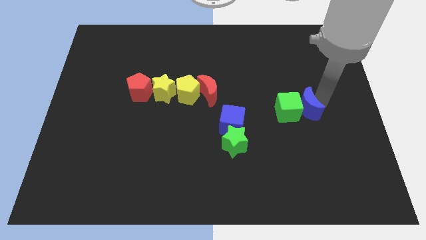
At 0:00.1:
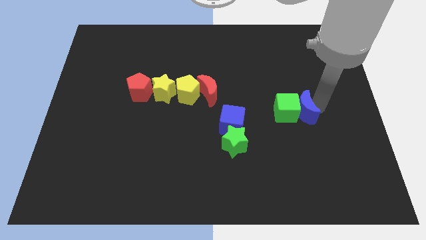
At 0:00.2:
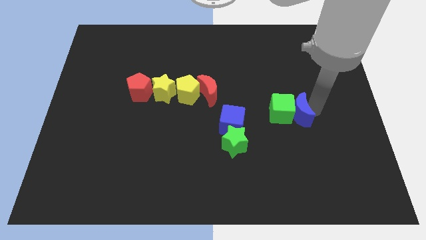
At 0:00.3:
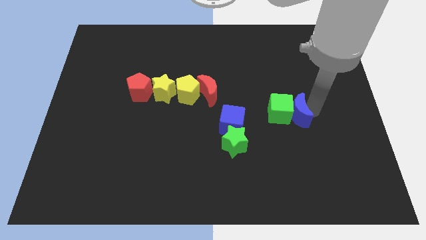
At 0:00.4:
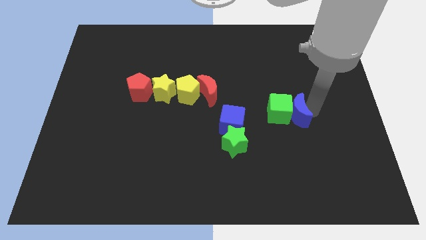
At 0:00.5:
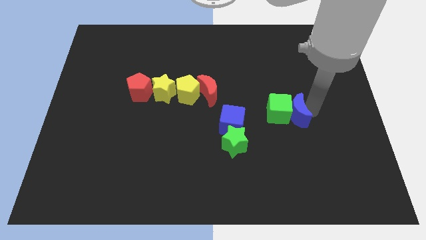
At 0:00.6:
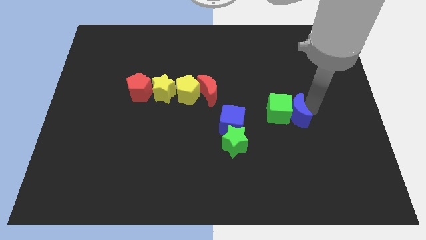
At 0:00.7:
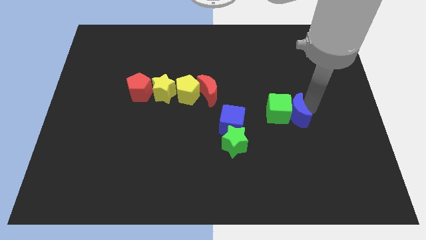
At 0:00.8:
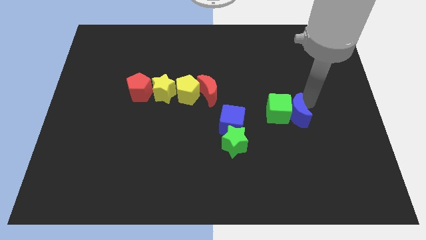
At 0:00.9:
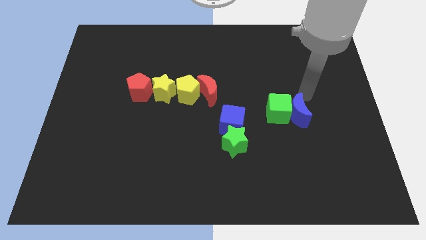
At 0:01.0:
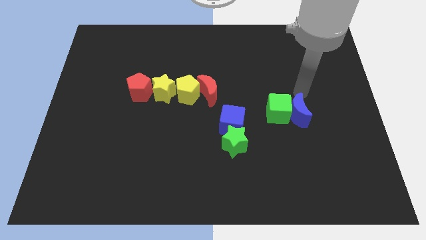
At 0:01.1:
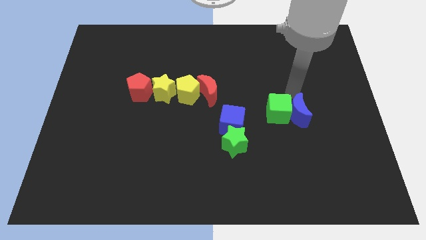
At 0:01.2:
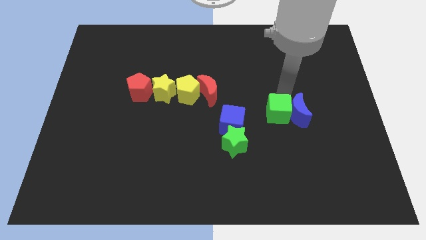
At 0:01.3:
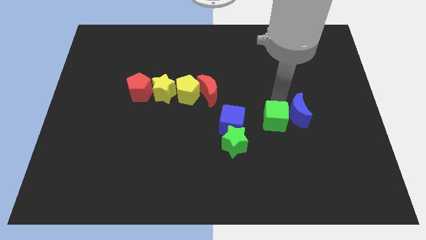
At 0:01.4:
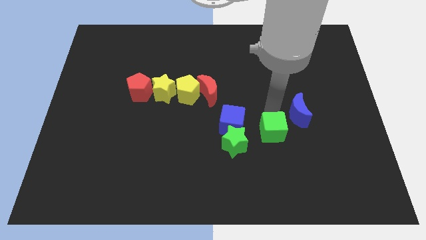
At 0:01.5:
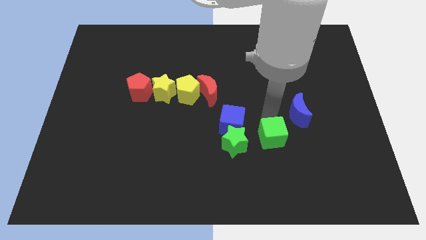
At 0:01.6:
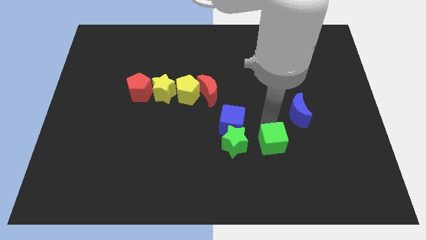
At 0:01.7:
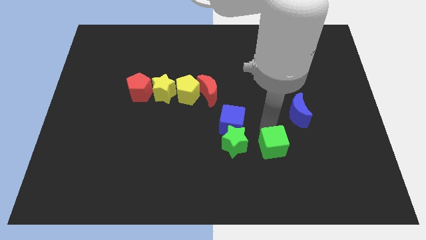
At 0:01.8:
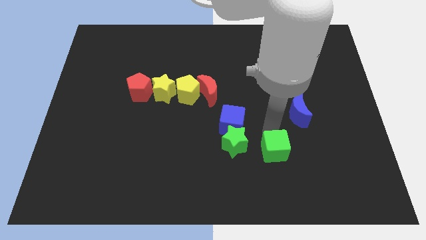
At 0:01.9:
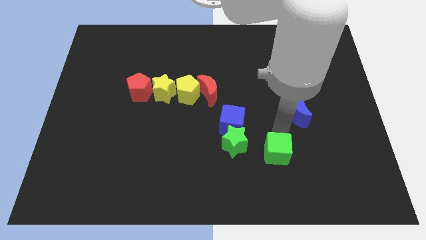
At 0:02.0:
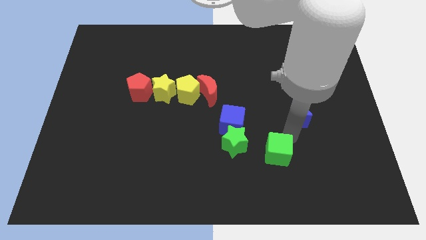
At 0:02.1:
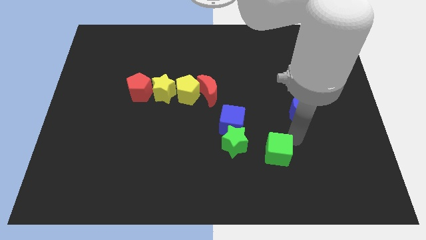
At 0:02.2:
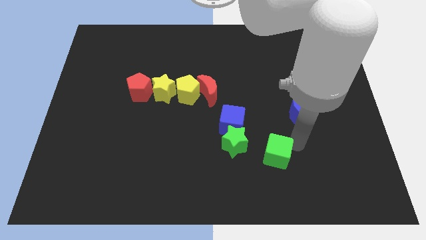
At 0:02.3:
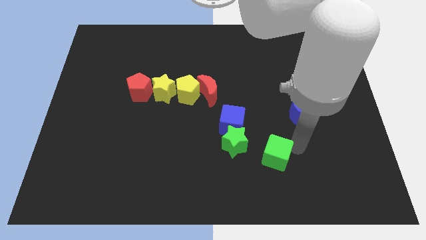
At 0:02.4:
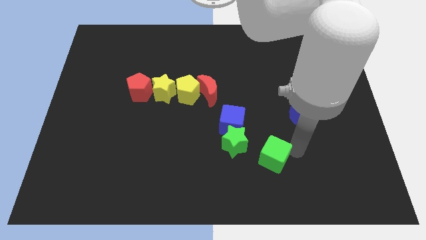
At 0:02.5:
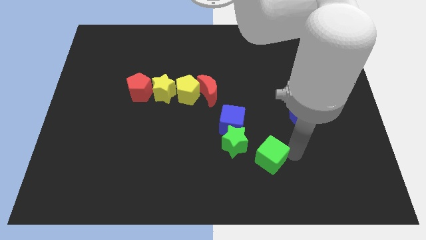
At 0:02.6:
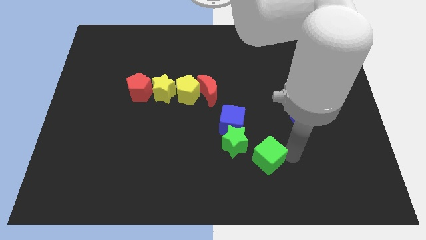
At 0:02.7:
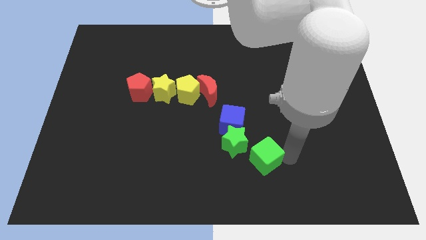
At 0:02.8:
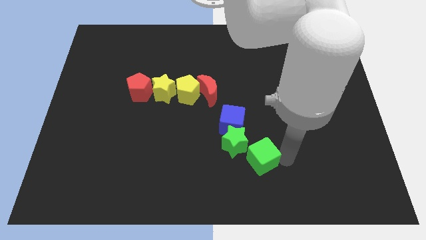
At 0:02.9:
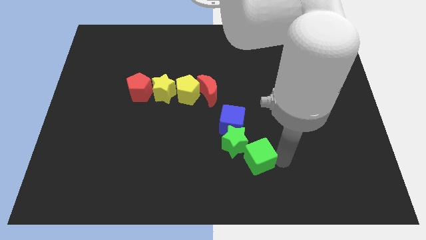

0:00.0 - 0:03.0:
move the green cube towards the bottom right of the green star

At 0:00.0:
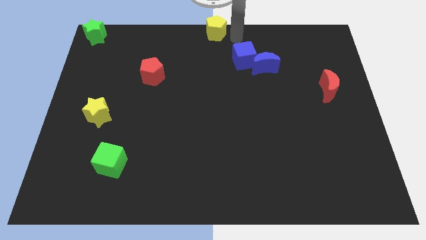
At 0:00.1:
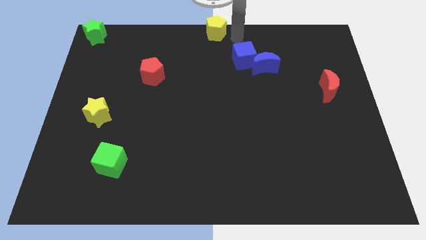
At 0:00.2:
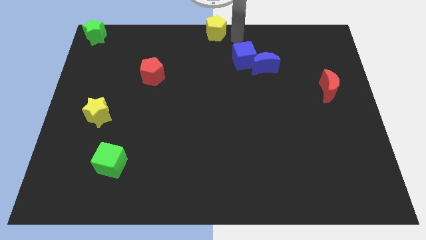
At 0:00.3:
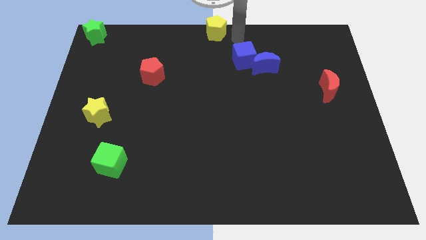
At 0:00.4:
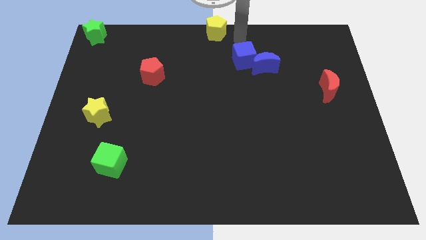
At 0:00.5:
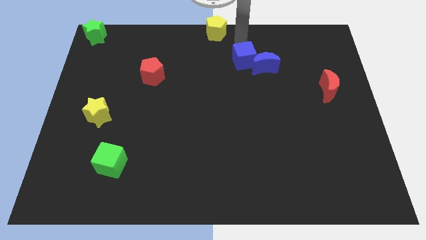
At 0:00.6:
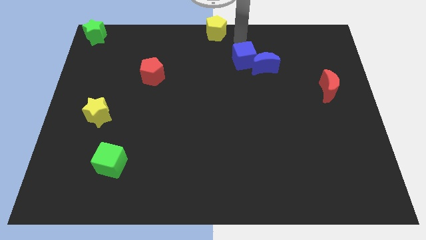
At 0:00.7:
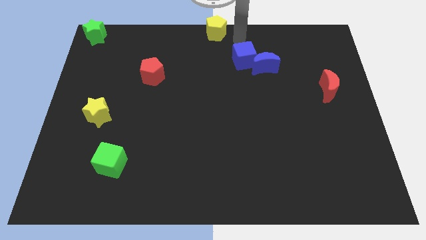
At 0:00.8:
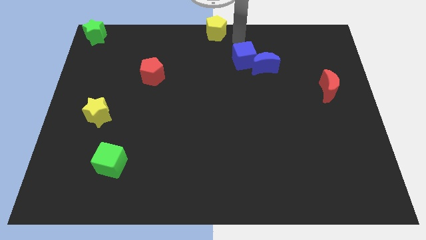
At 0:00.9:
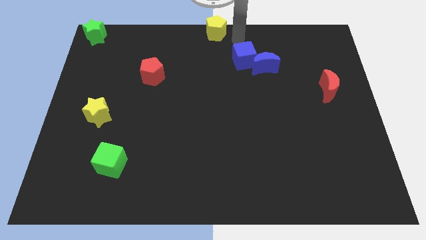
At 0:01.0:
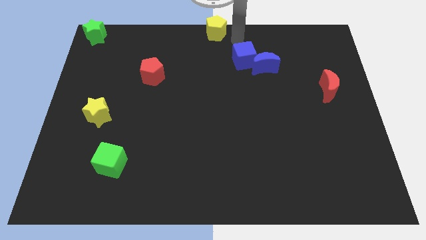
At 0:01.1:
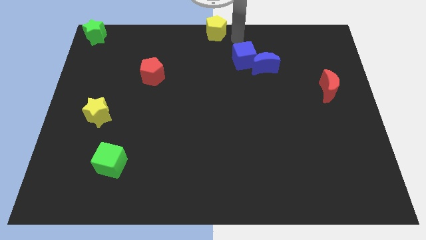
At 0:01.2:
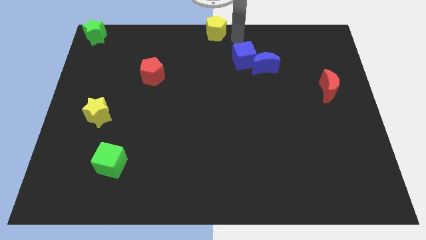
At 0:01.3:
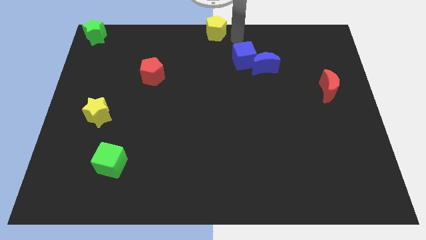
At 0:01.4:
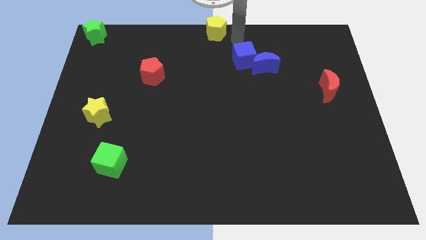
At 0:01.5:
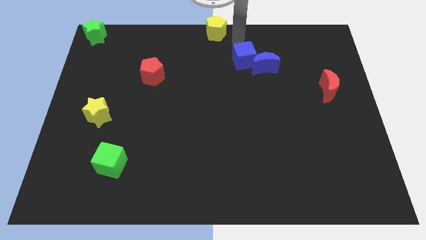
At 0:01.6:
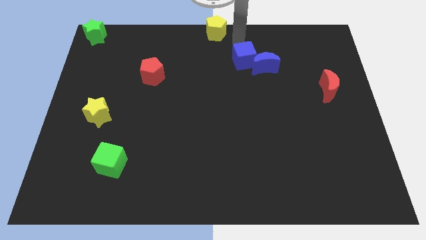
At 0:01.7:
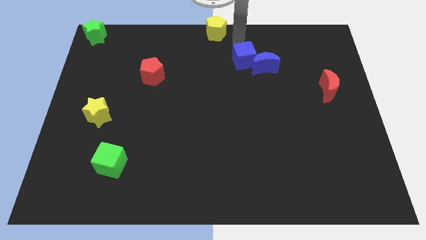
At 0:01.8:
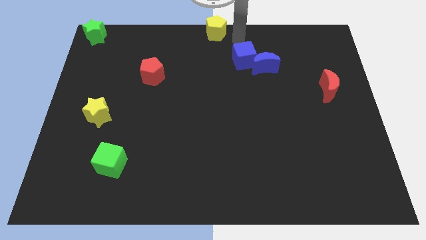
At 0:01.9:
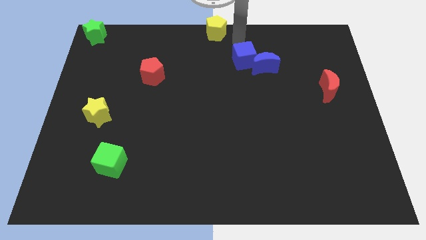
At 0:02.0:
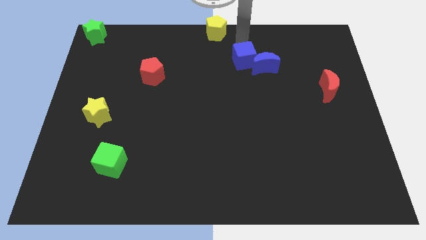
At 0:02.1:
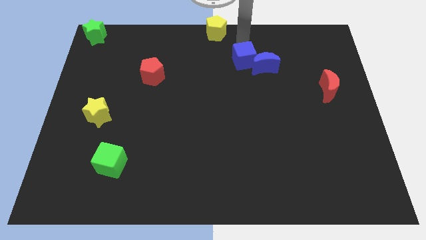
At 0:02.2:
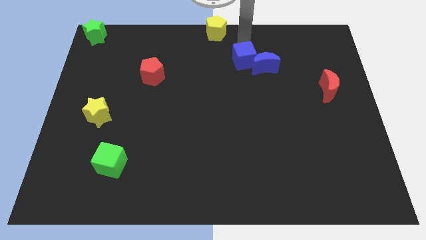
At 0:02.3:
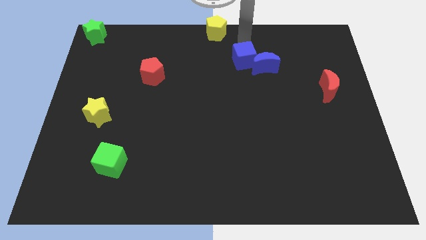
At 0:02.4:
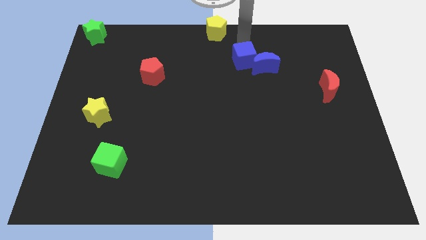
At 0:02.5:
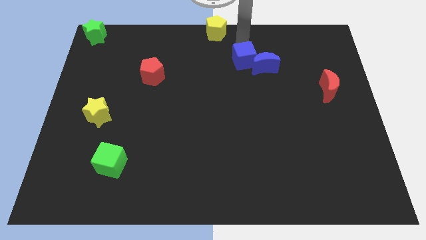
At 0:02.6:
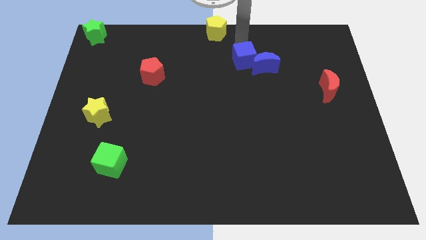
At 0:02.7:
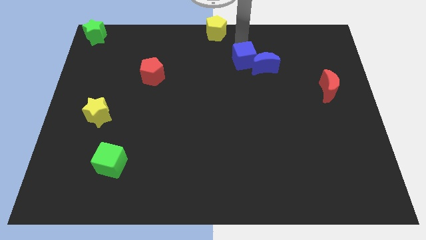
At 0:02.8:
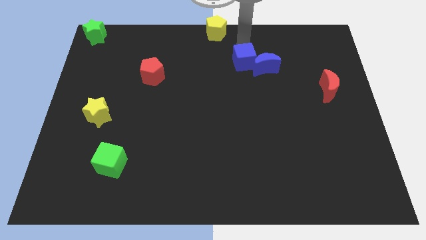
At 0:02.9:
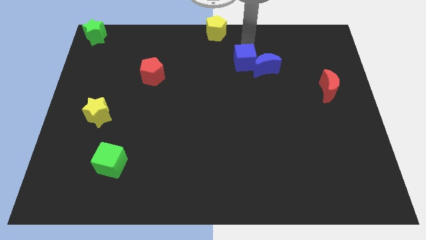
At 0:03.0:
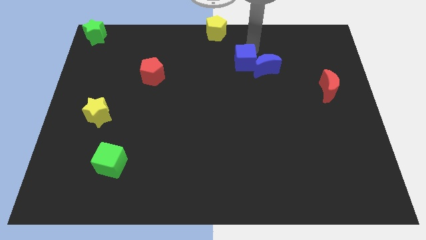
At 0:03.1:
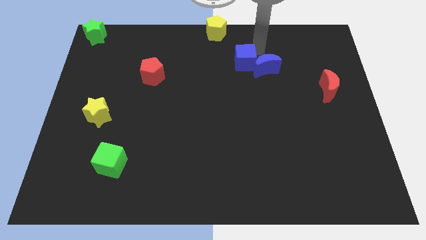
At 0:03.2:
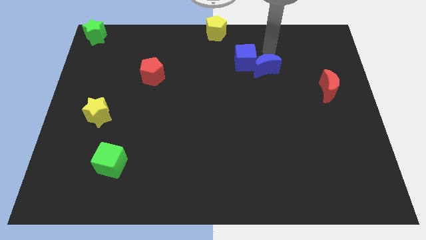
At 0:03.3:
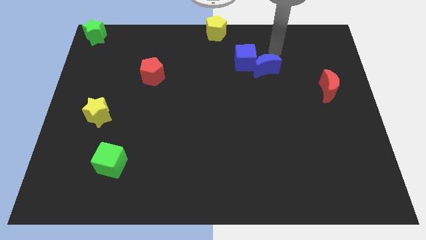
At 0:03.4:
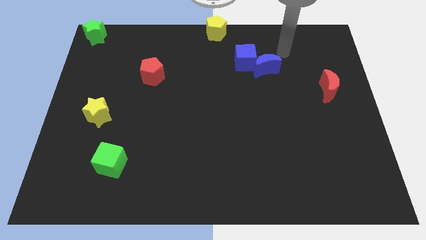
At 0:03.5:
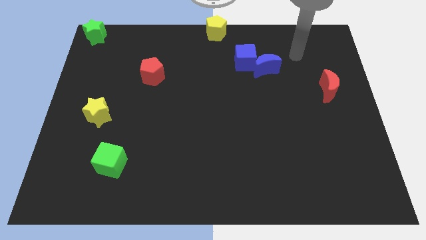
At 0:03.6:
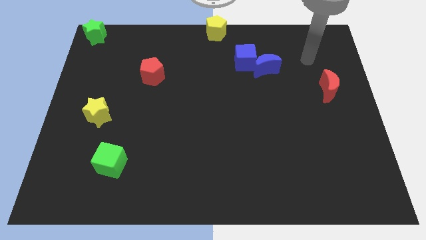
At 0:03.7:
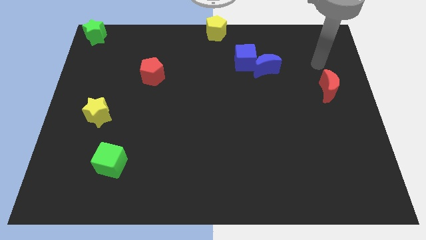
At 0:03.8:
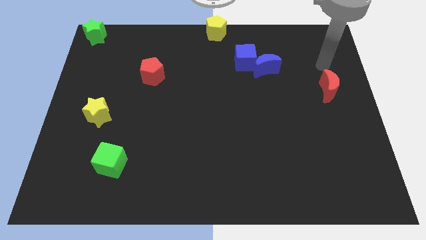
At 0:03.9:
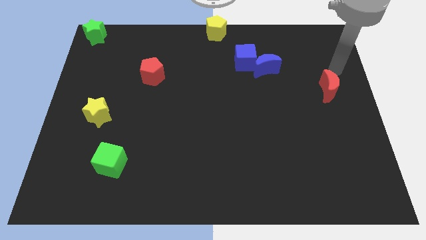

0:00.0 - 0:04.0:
move your arm away from the yellow pentagon

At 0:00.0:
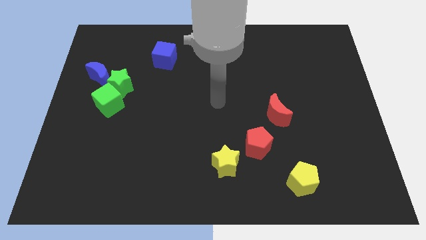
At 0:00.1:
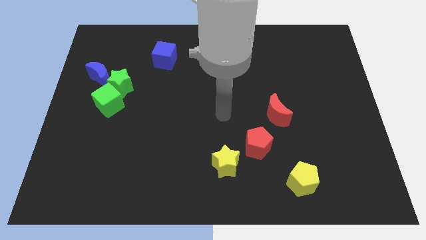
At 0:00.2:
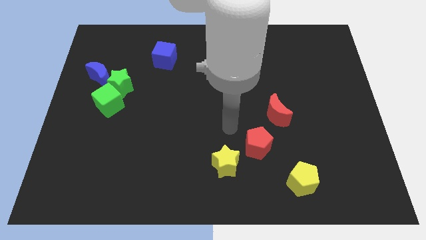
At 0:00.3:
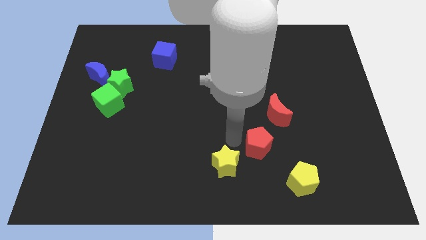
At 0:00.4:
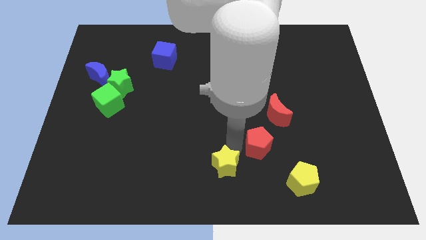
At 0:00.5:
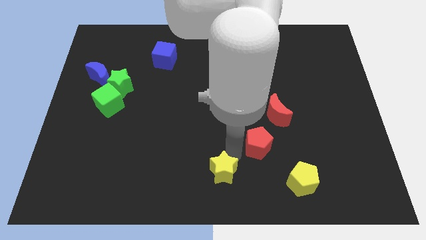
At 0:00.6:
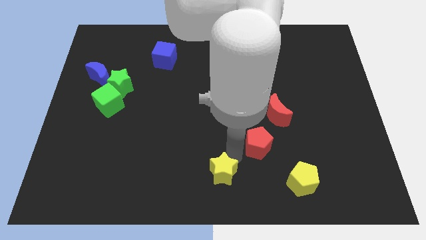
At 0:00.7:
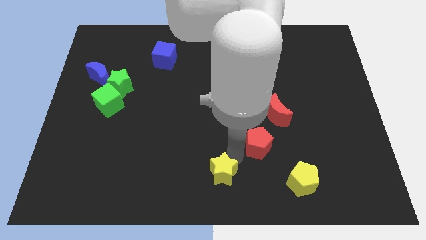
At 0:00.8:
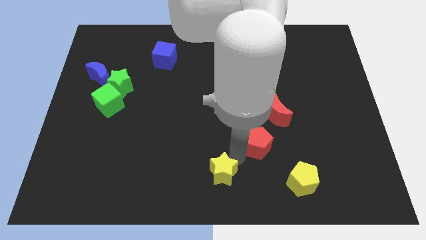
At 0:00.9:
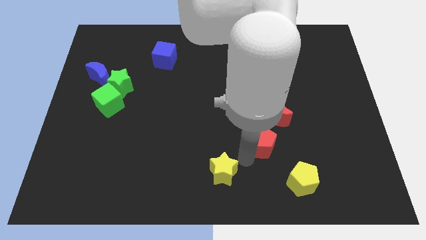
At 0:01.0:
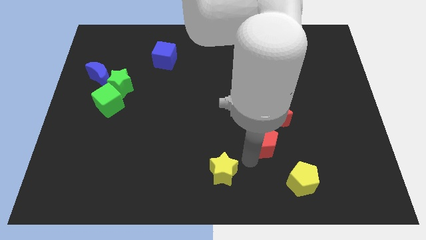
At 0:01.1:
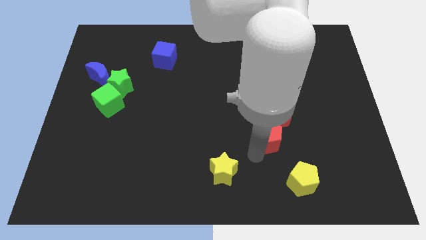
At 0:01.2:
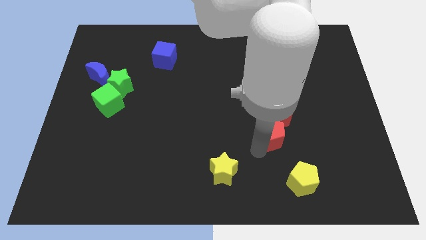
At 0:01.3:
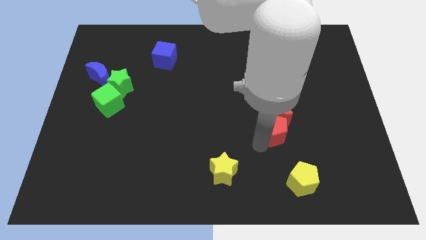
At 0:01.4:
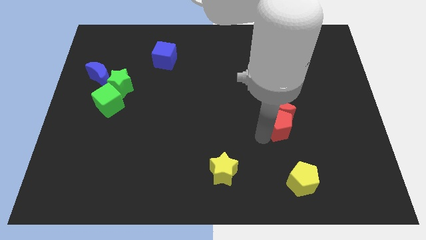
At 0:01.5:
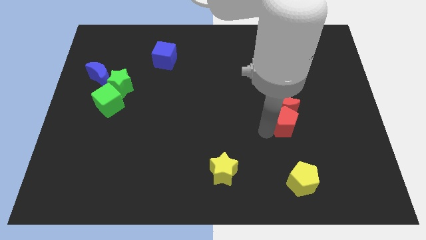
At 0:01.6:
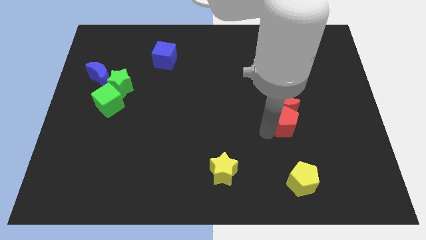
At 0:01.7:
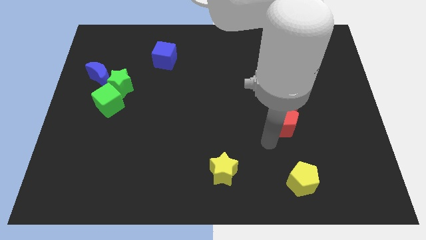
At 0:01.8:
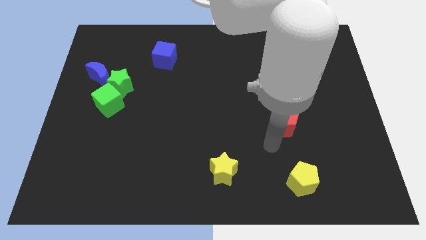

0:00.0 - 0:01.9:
move the red pentagon into the red moon

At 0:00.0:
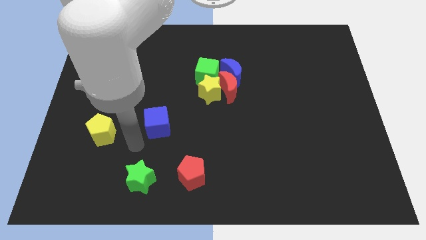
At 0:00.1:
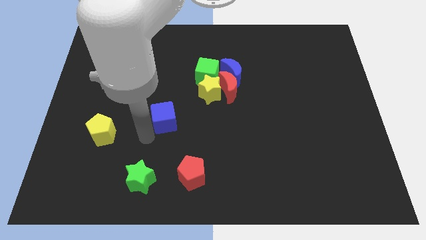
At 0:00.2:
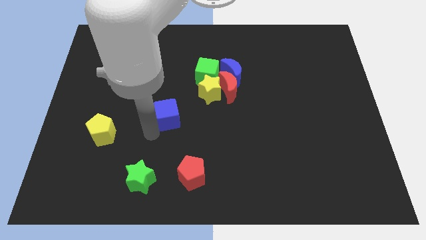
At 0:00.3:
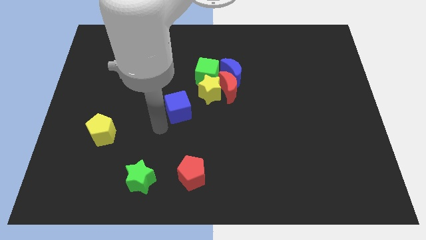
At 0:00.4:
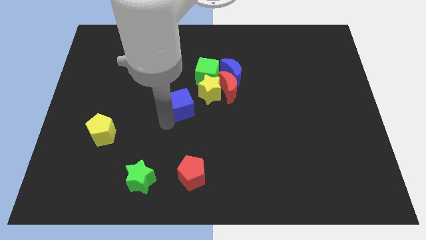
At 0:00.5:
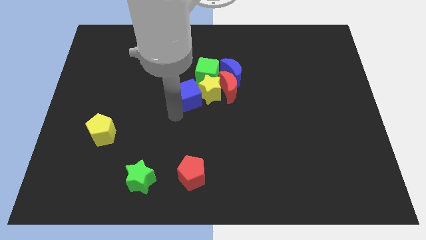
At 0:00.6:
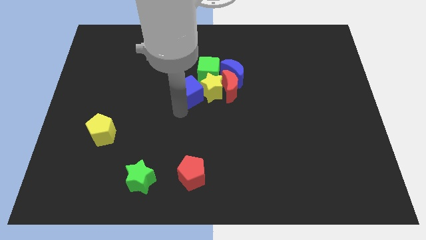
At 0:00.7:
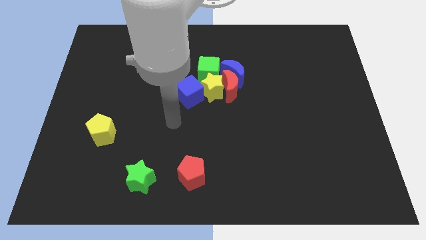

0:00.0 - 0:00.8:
push the blue cube into the group of blocks
